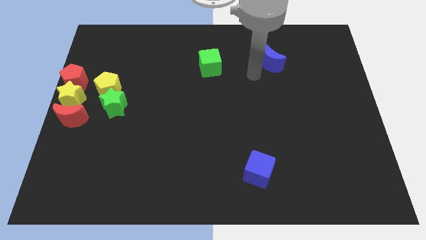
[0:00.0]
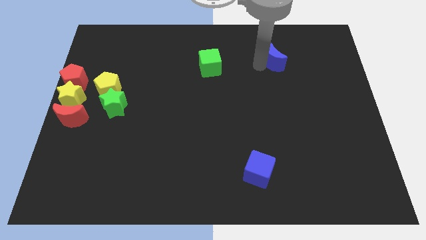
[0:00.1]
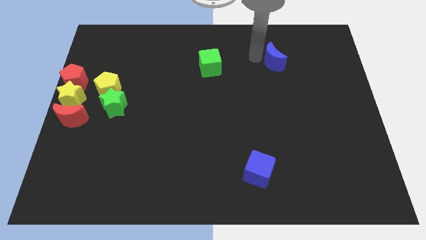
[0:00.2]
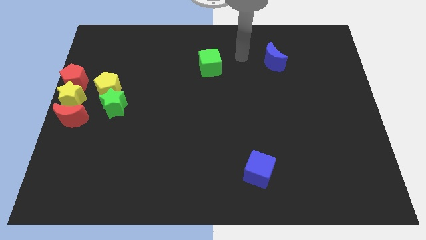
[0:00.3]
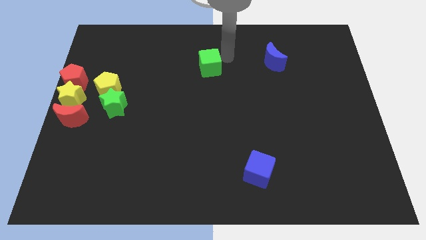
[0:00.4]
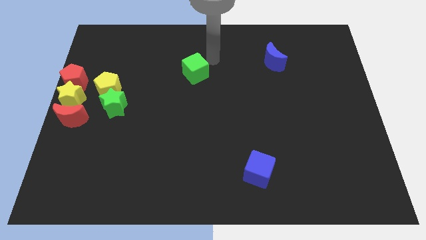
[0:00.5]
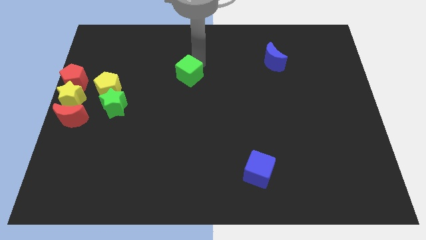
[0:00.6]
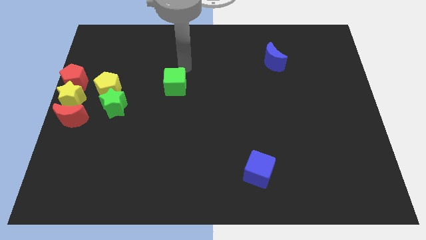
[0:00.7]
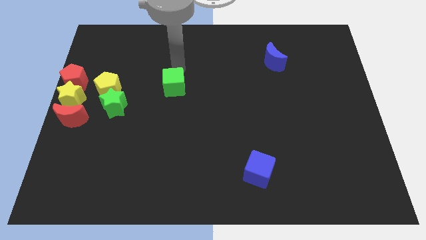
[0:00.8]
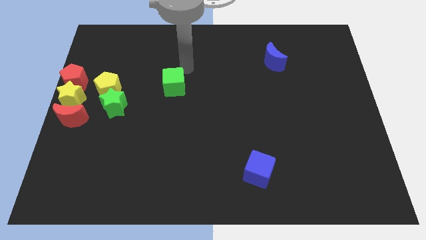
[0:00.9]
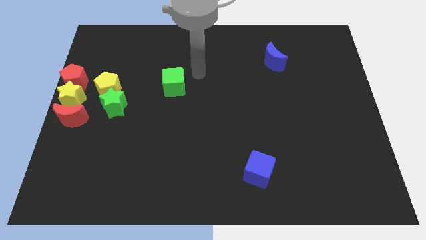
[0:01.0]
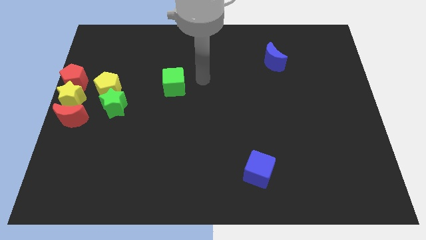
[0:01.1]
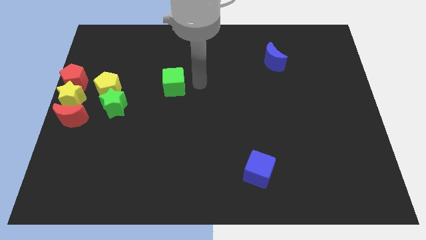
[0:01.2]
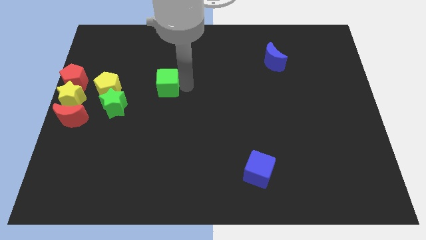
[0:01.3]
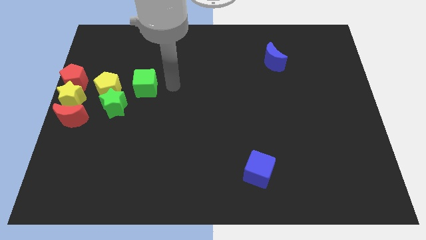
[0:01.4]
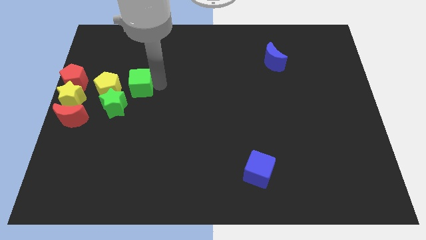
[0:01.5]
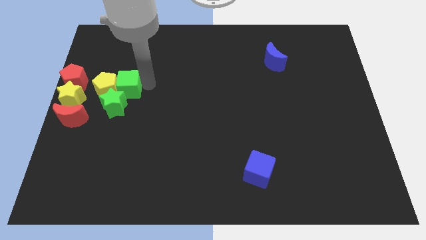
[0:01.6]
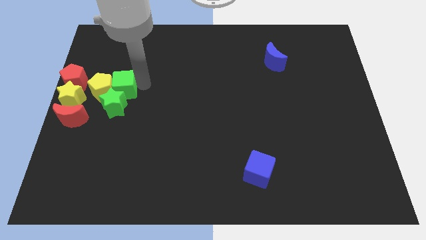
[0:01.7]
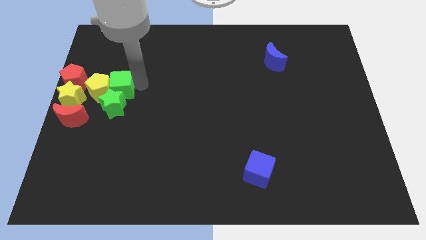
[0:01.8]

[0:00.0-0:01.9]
move the green cube to the right of the yellow pentagon

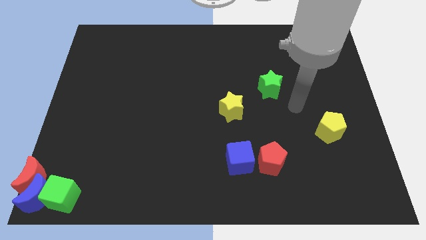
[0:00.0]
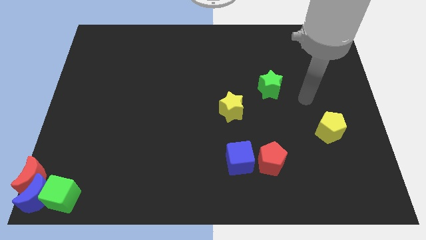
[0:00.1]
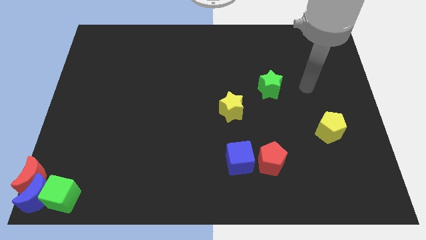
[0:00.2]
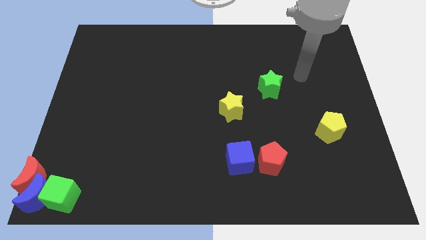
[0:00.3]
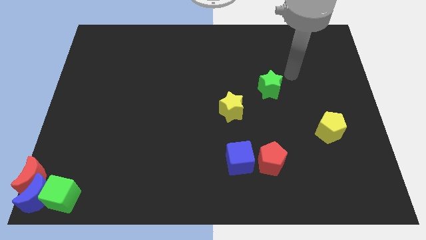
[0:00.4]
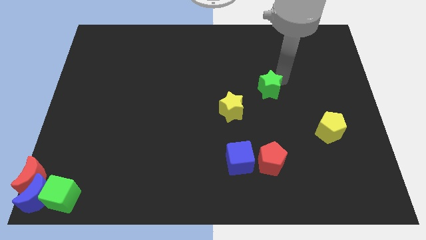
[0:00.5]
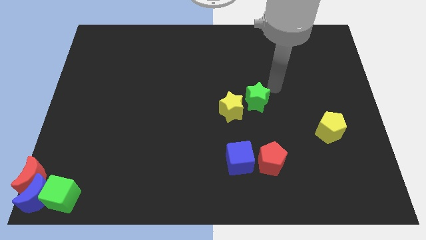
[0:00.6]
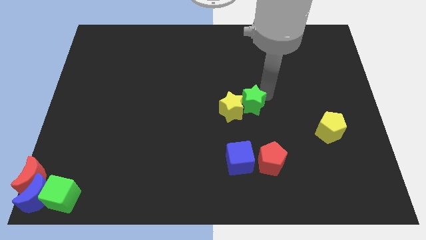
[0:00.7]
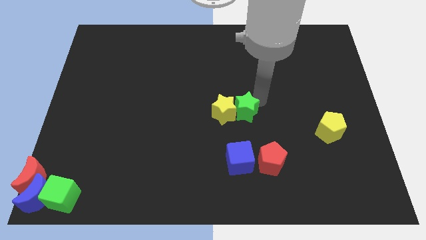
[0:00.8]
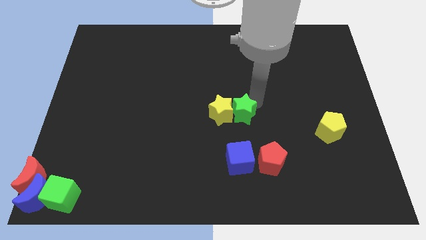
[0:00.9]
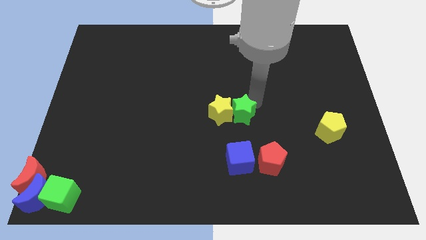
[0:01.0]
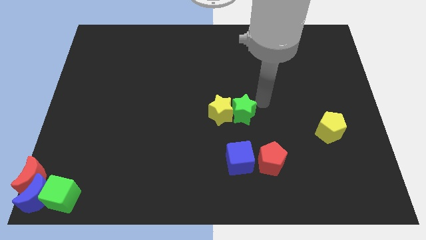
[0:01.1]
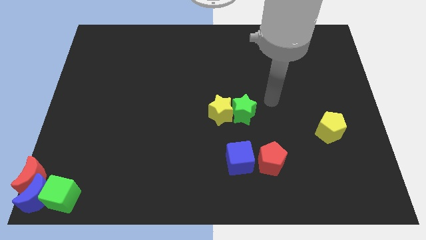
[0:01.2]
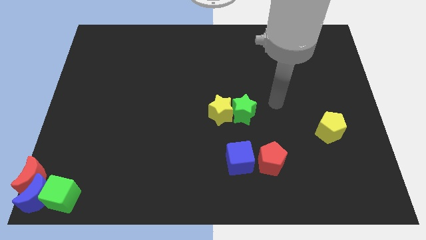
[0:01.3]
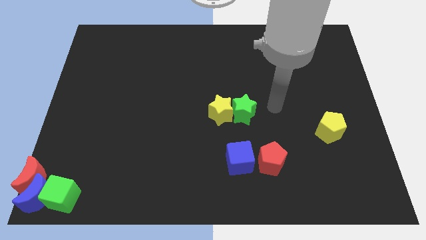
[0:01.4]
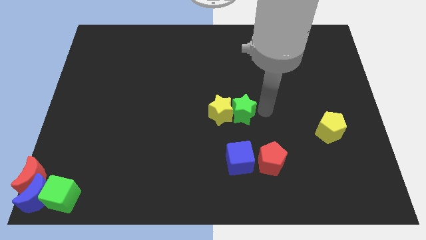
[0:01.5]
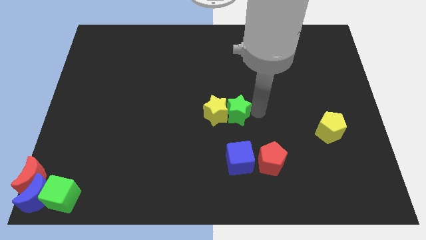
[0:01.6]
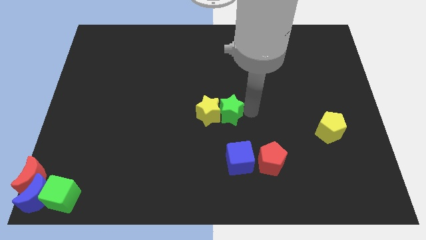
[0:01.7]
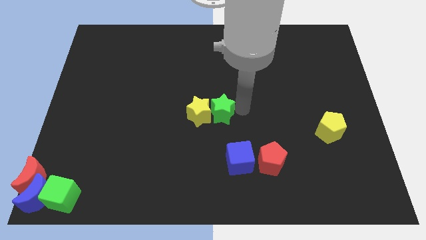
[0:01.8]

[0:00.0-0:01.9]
move the green star to the left of the yellow star

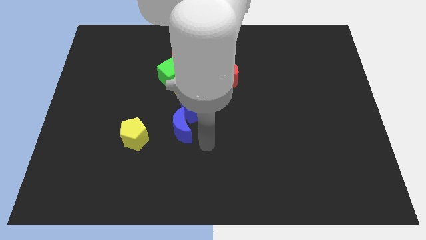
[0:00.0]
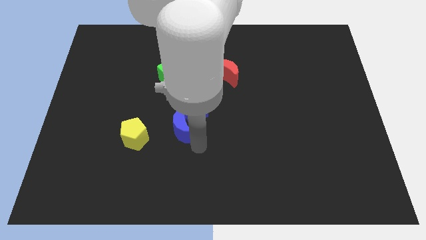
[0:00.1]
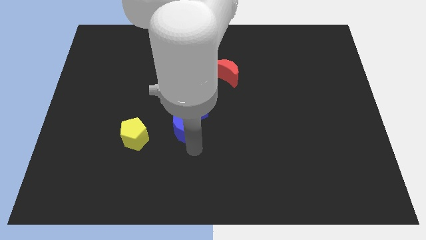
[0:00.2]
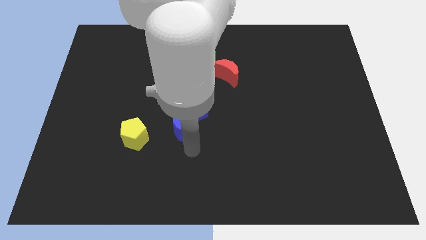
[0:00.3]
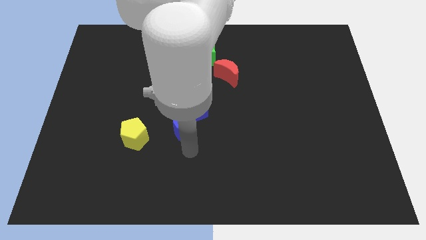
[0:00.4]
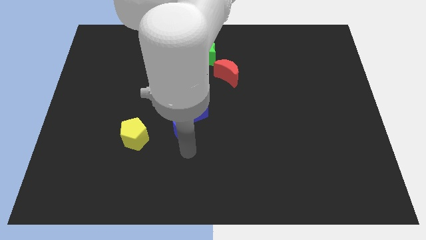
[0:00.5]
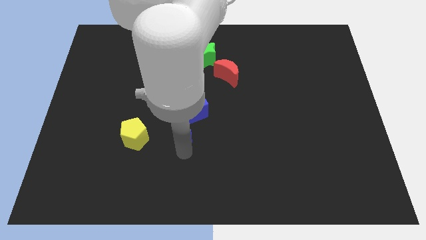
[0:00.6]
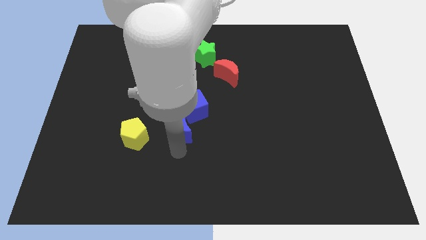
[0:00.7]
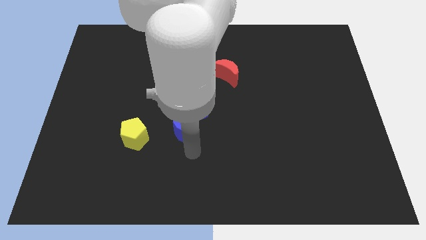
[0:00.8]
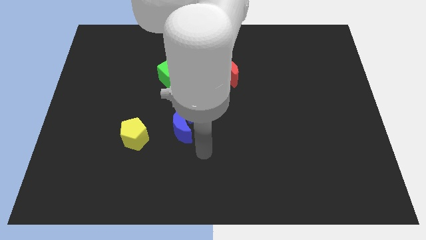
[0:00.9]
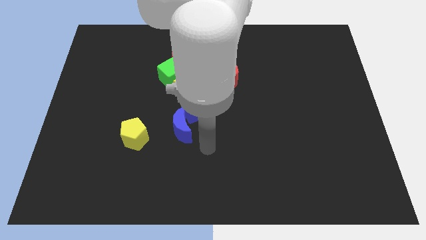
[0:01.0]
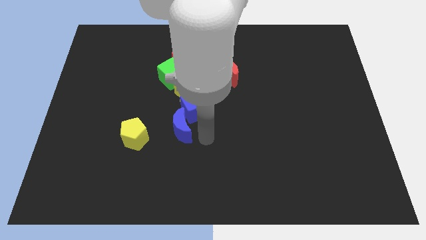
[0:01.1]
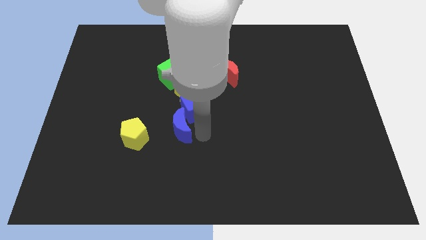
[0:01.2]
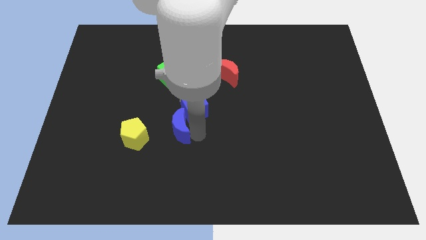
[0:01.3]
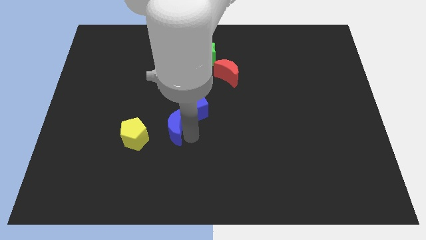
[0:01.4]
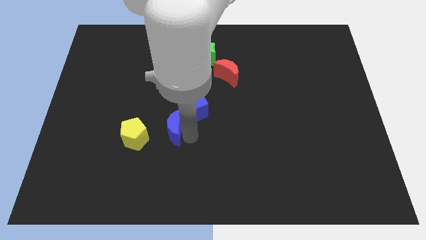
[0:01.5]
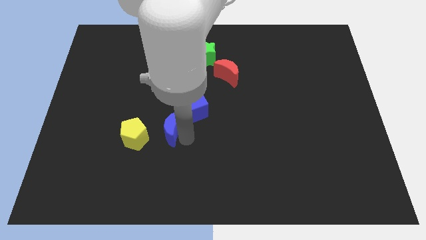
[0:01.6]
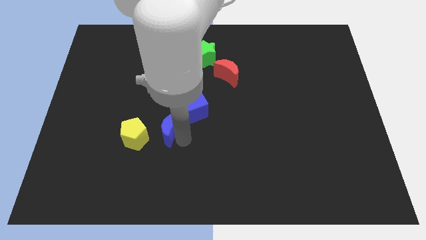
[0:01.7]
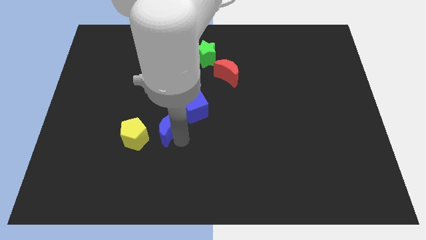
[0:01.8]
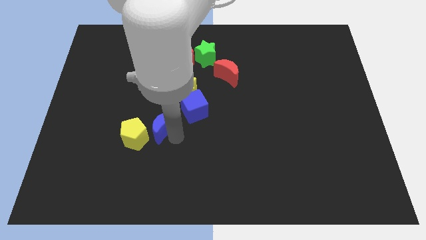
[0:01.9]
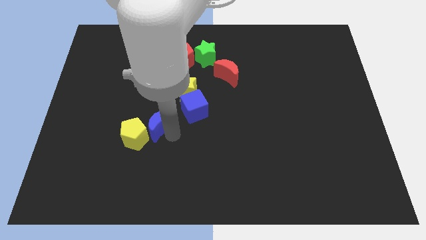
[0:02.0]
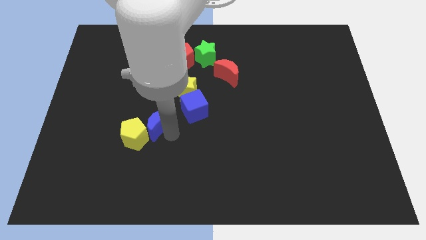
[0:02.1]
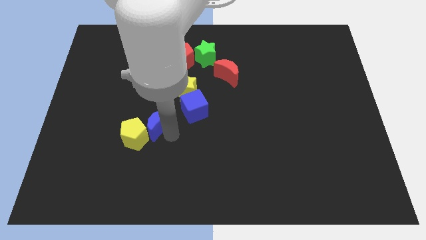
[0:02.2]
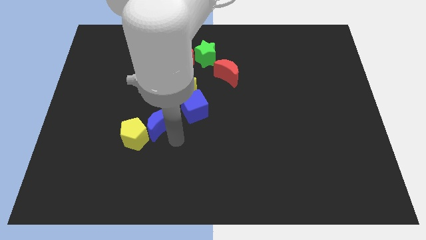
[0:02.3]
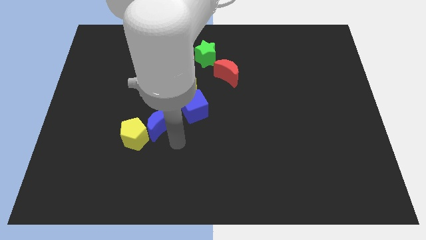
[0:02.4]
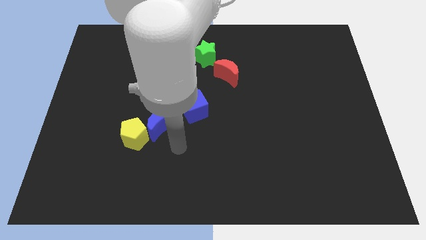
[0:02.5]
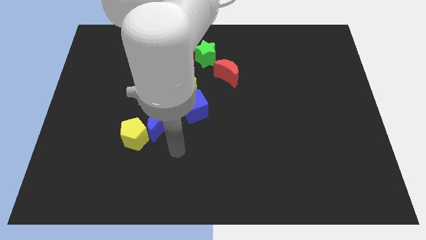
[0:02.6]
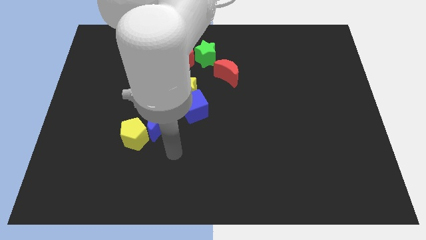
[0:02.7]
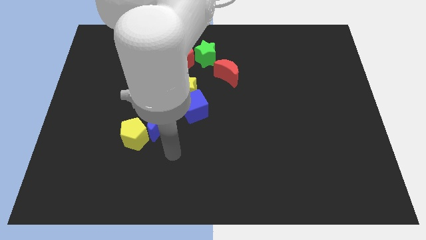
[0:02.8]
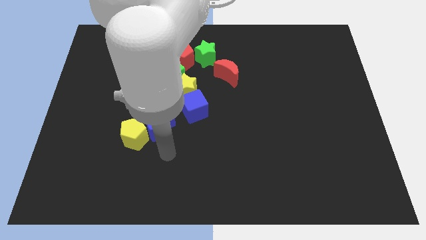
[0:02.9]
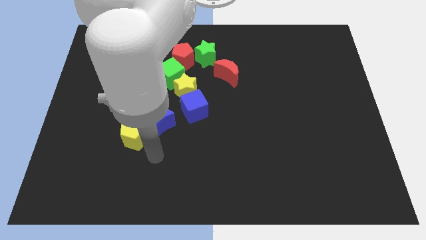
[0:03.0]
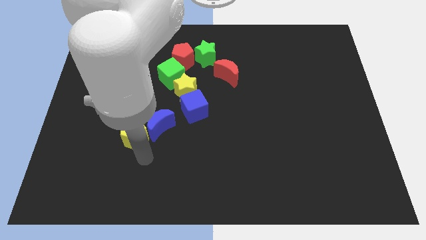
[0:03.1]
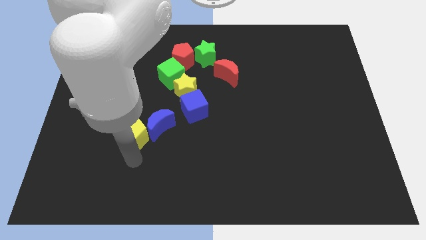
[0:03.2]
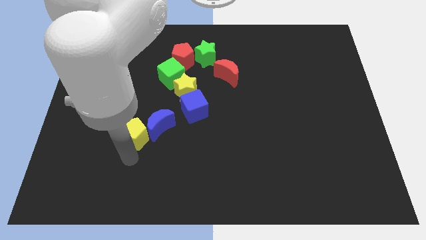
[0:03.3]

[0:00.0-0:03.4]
separate blue moon from the blue cube

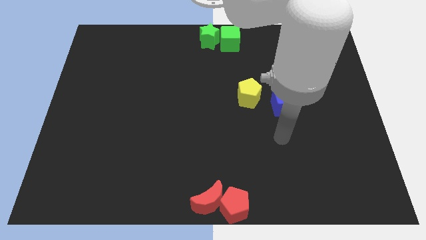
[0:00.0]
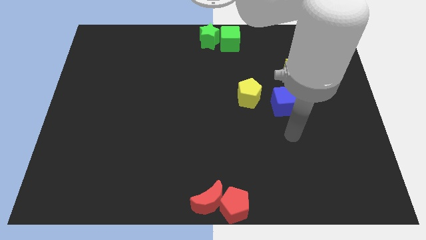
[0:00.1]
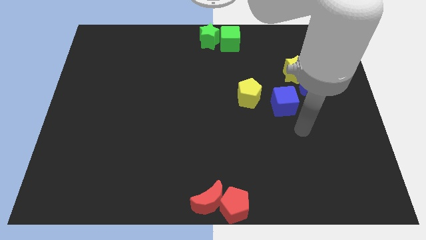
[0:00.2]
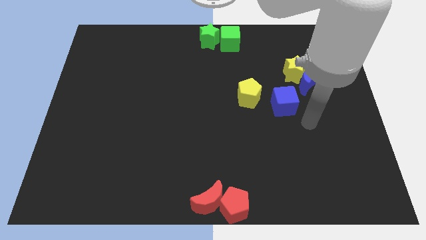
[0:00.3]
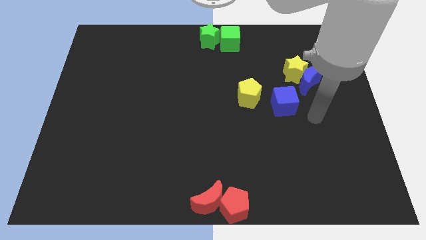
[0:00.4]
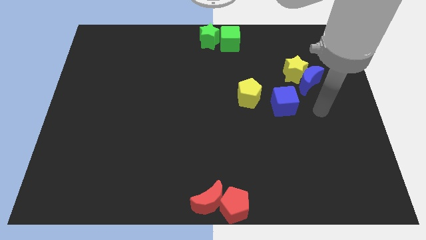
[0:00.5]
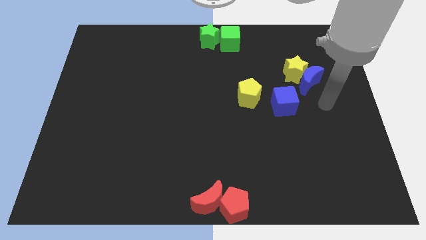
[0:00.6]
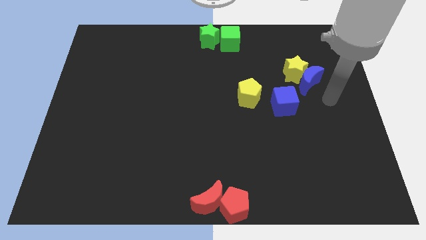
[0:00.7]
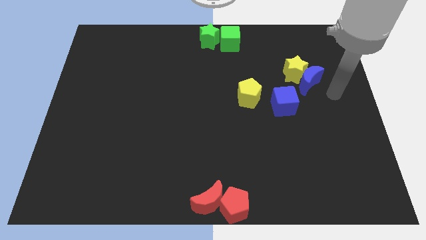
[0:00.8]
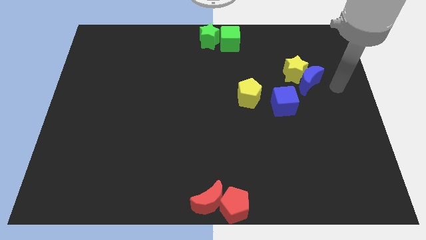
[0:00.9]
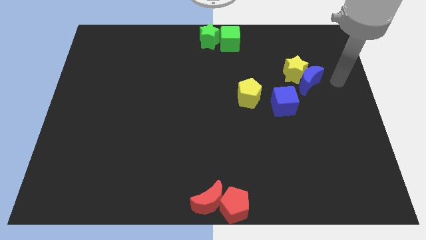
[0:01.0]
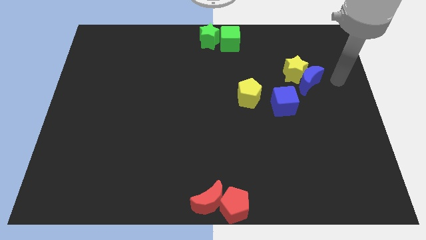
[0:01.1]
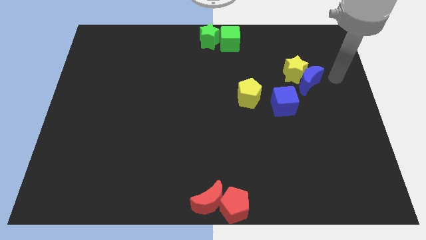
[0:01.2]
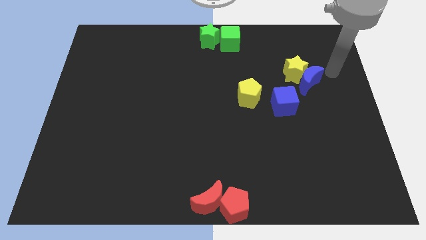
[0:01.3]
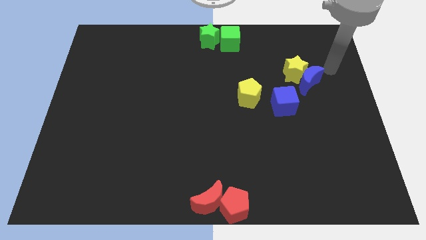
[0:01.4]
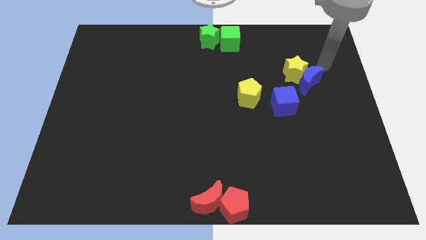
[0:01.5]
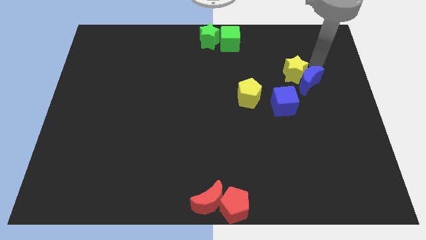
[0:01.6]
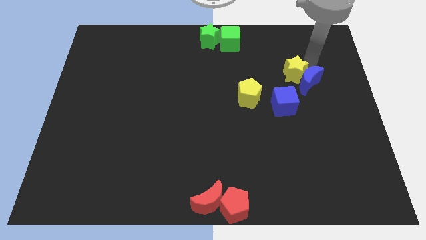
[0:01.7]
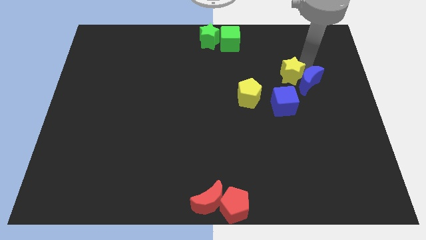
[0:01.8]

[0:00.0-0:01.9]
touch the right side of the yellow star
